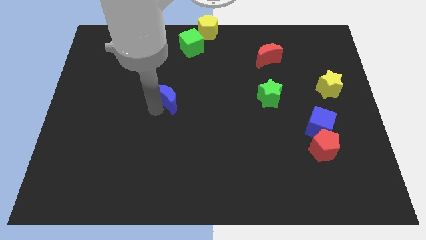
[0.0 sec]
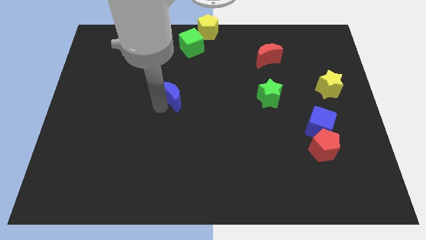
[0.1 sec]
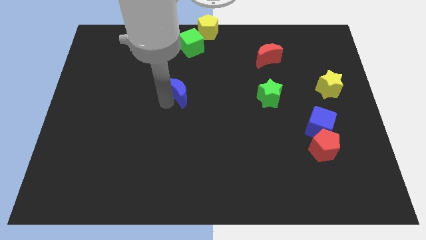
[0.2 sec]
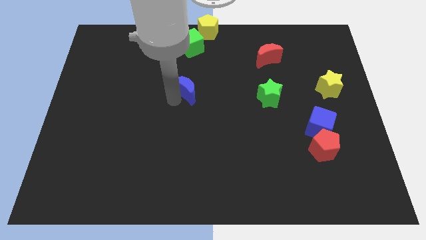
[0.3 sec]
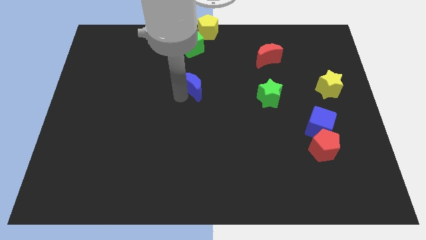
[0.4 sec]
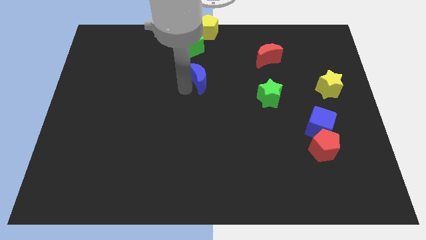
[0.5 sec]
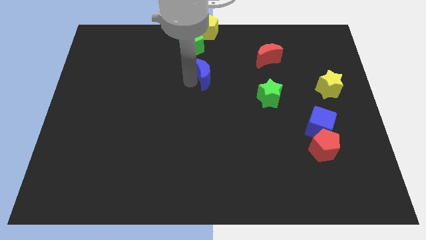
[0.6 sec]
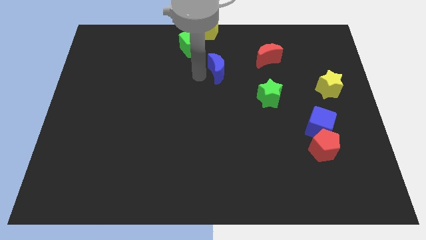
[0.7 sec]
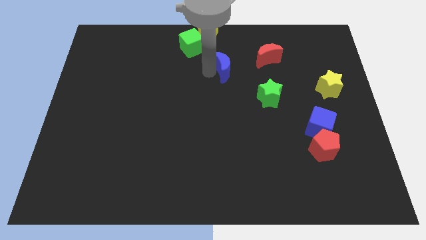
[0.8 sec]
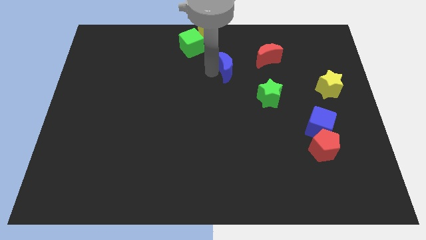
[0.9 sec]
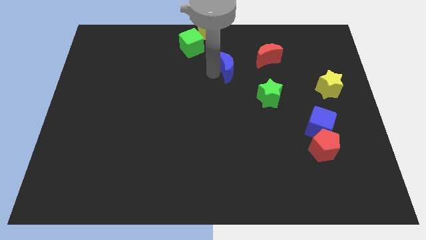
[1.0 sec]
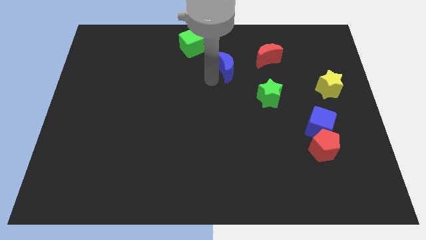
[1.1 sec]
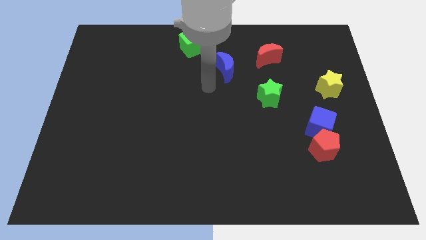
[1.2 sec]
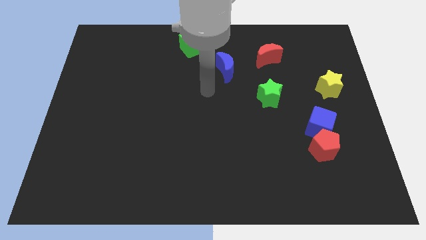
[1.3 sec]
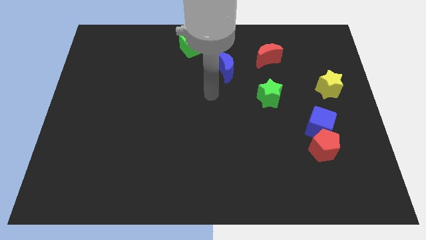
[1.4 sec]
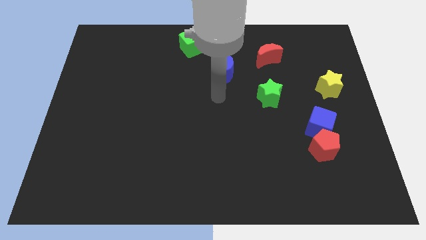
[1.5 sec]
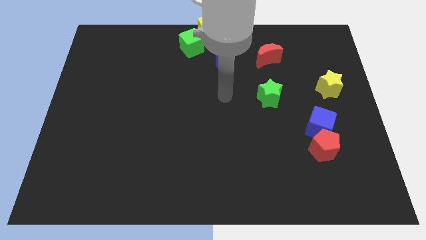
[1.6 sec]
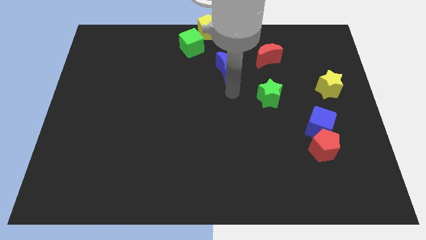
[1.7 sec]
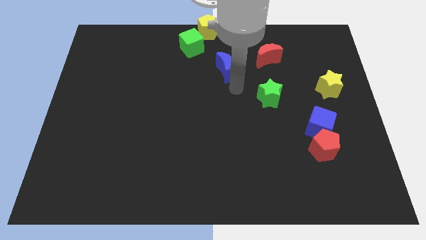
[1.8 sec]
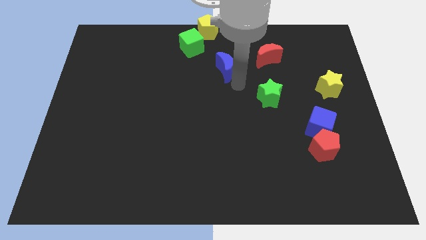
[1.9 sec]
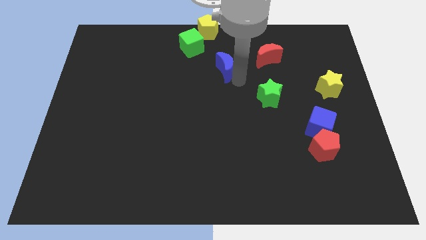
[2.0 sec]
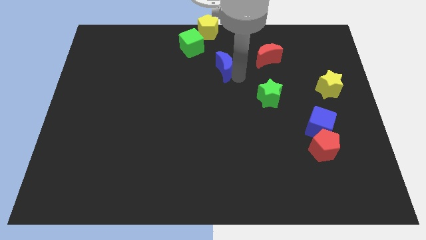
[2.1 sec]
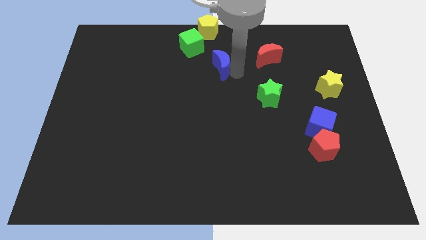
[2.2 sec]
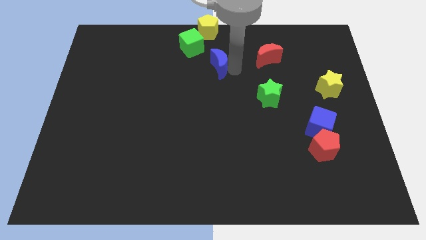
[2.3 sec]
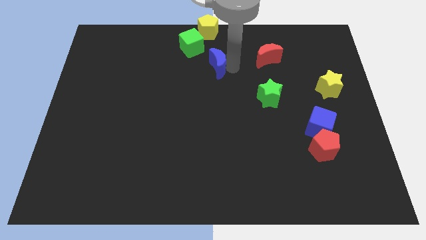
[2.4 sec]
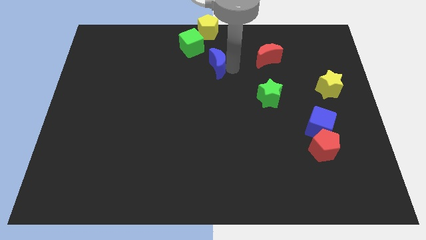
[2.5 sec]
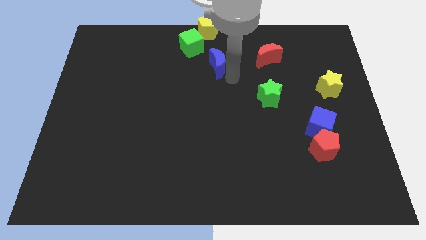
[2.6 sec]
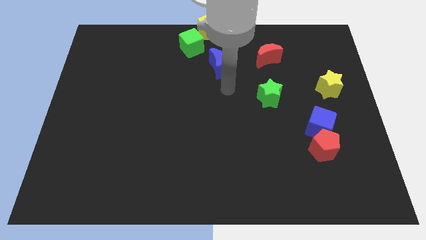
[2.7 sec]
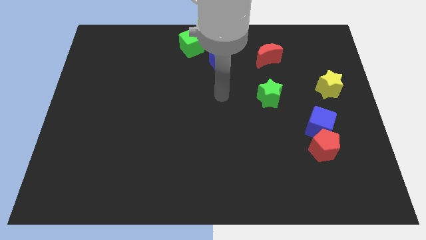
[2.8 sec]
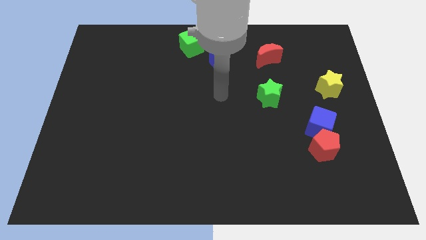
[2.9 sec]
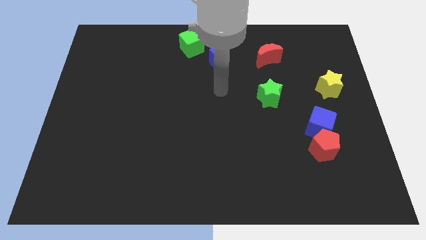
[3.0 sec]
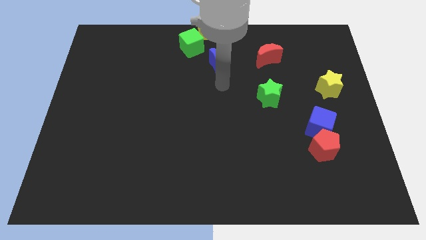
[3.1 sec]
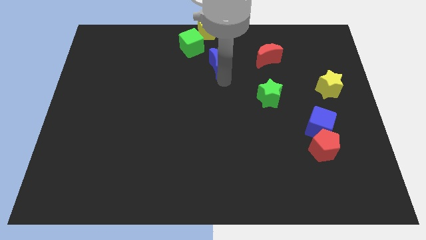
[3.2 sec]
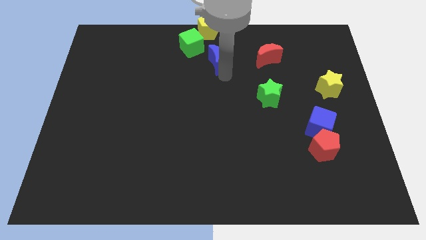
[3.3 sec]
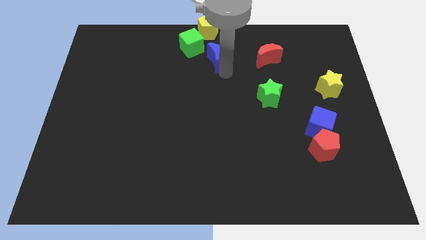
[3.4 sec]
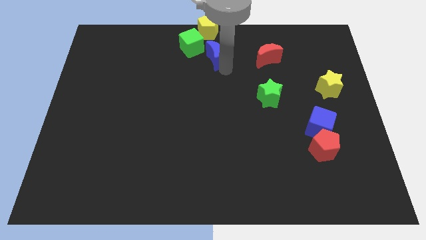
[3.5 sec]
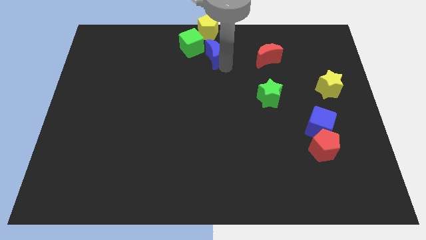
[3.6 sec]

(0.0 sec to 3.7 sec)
place the blue moon at the bottom of yellow pentagon

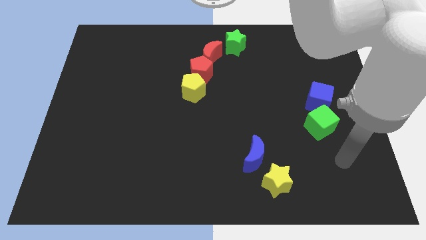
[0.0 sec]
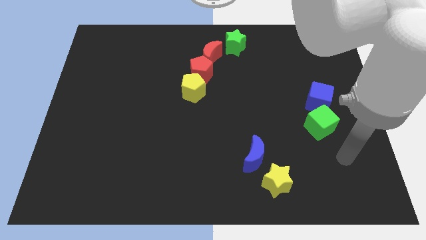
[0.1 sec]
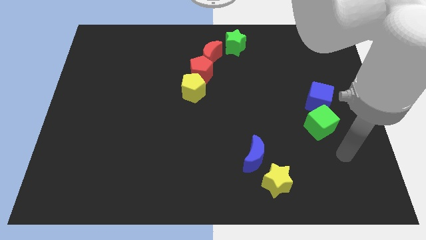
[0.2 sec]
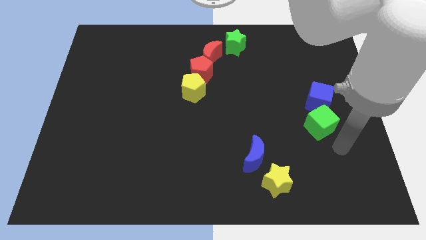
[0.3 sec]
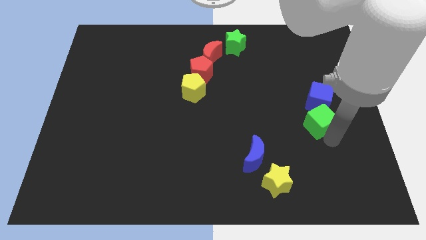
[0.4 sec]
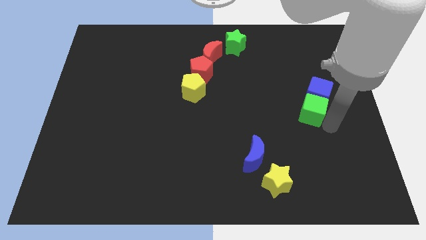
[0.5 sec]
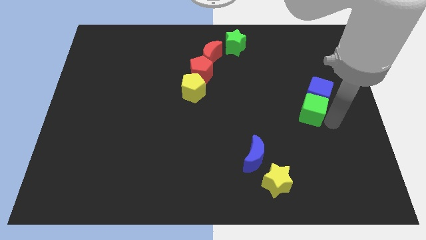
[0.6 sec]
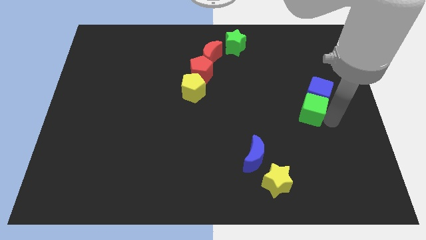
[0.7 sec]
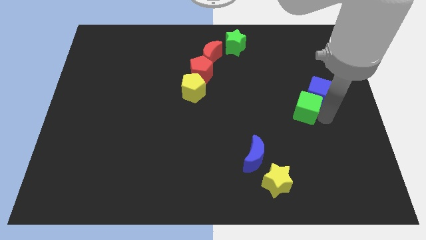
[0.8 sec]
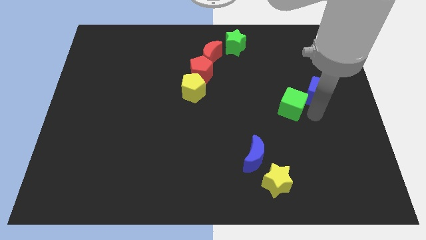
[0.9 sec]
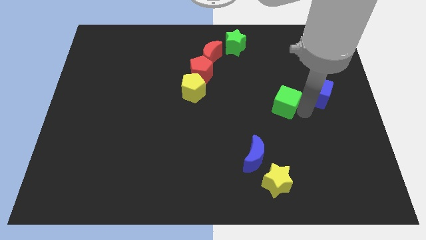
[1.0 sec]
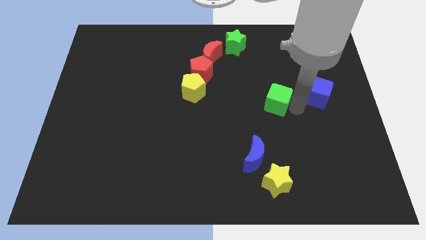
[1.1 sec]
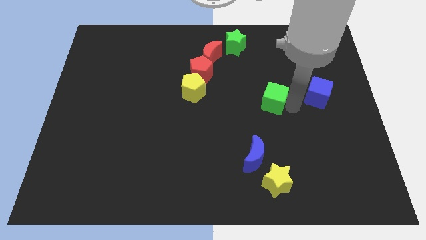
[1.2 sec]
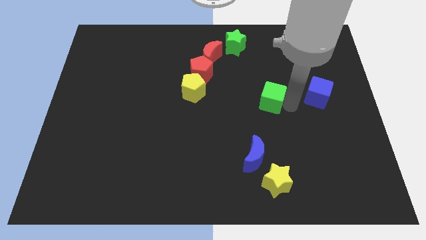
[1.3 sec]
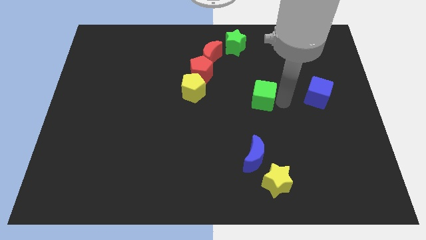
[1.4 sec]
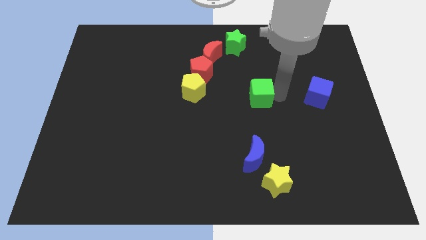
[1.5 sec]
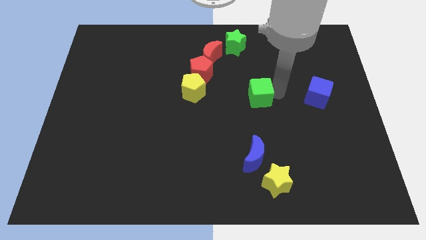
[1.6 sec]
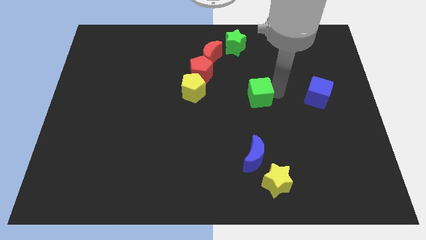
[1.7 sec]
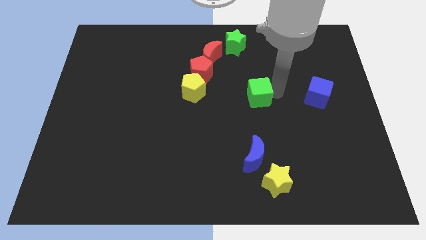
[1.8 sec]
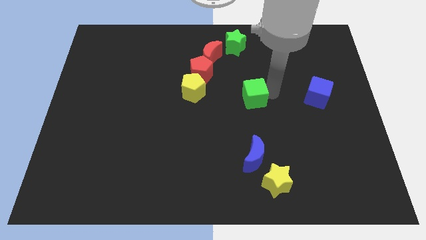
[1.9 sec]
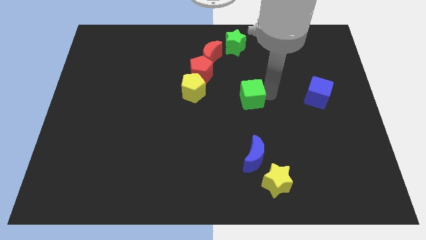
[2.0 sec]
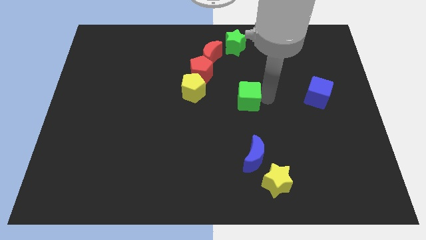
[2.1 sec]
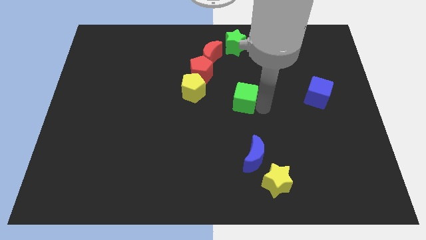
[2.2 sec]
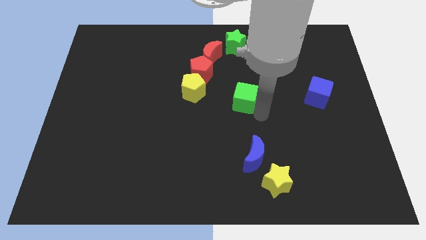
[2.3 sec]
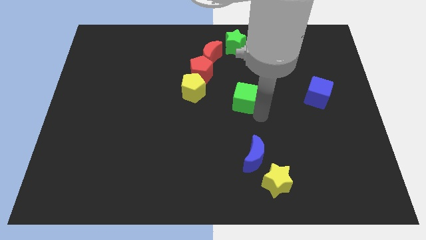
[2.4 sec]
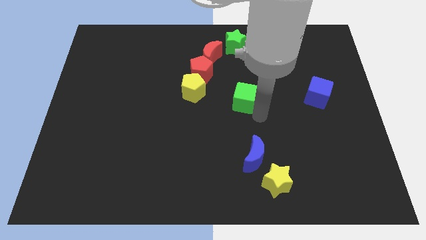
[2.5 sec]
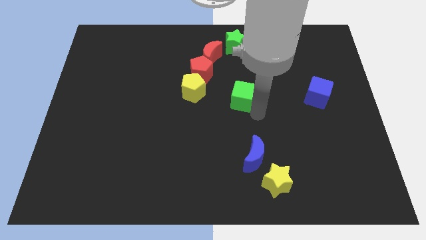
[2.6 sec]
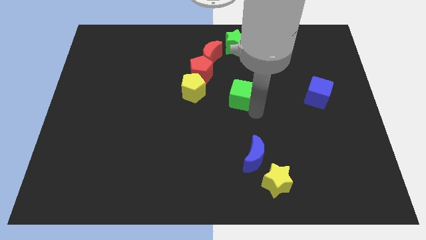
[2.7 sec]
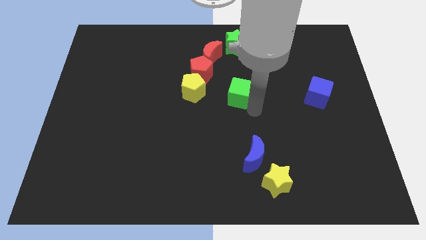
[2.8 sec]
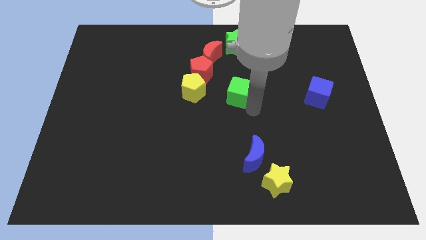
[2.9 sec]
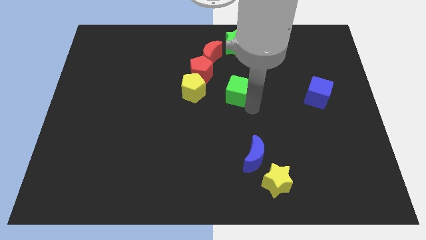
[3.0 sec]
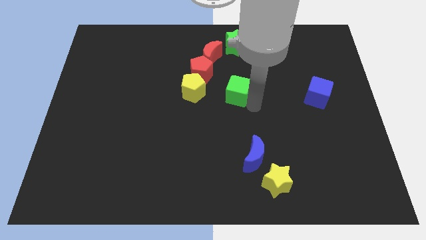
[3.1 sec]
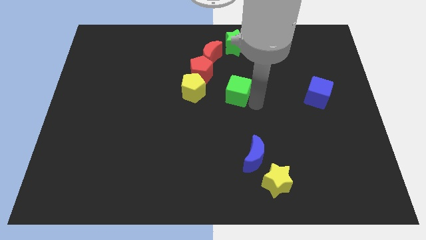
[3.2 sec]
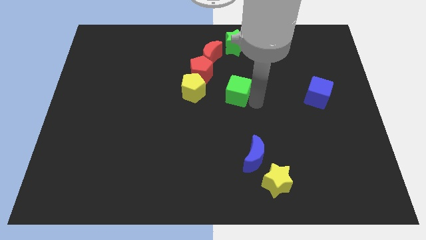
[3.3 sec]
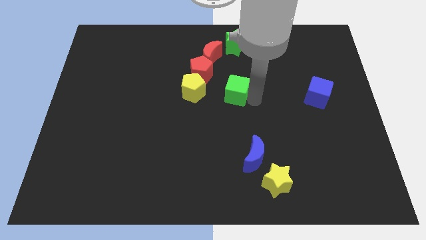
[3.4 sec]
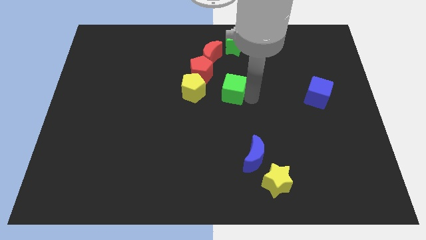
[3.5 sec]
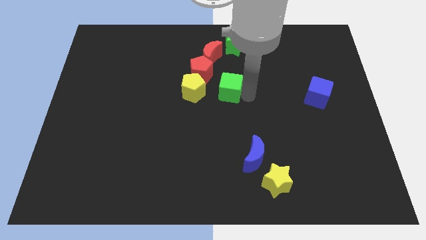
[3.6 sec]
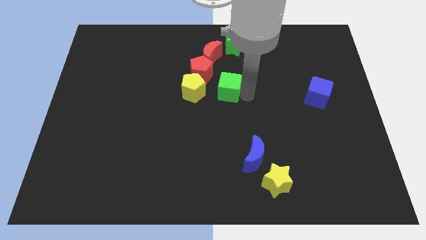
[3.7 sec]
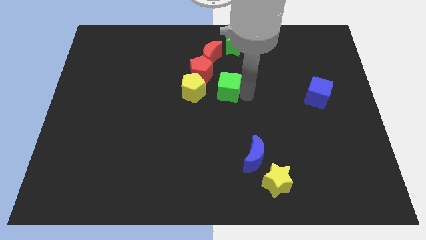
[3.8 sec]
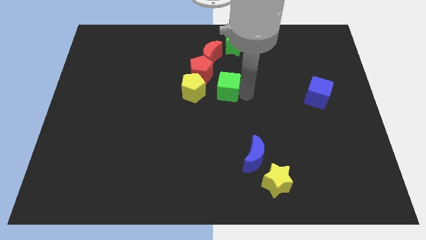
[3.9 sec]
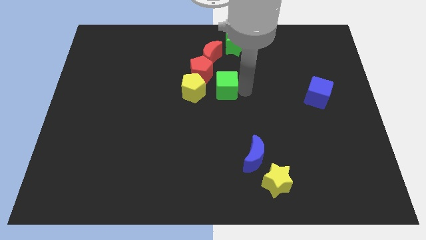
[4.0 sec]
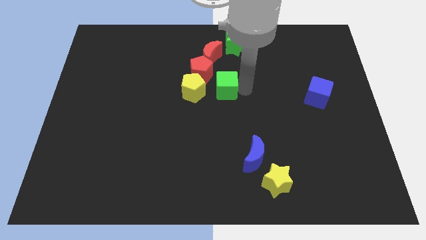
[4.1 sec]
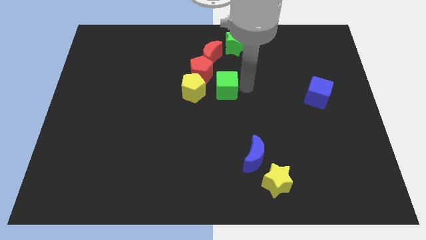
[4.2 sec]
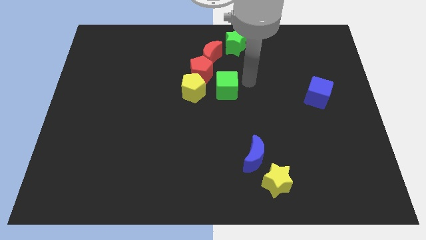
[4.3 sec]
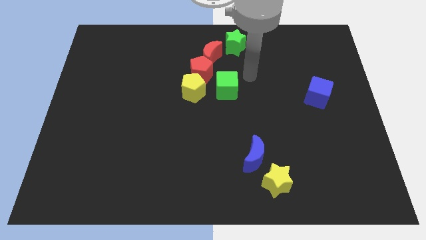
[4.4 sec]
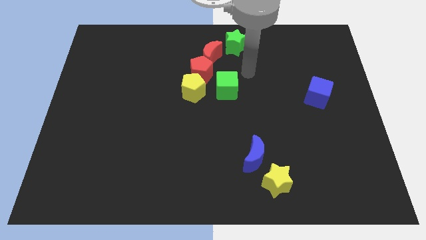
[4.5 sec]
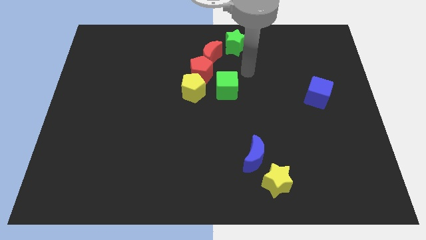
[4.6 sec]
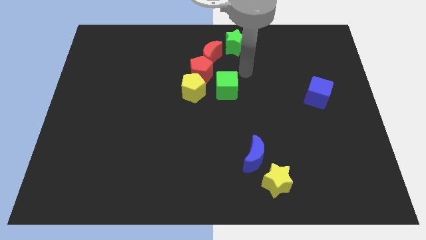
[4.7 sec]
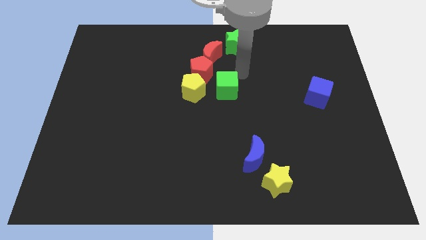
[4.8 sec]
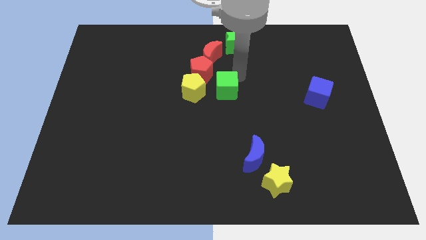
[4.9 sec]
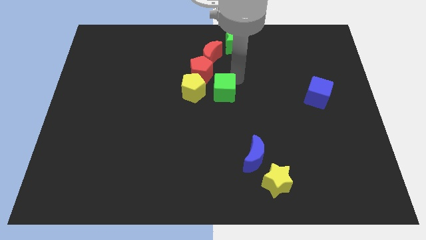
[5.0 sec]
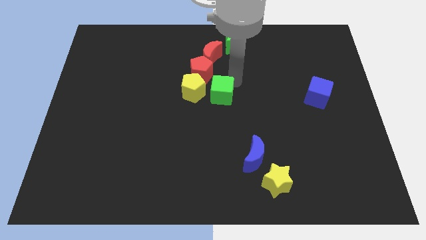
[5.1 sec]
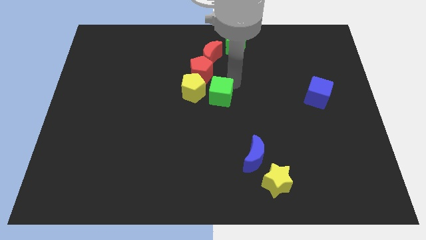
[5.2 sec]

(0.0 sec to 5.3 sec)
place the green cube in between the blue cube and yellow pentagon
